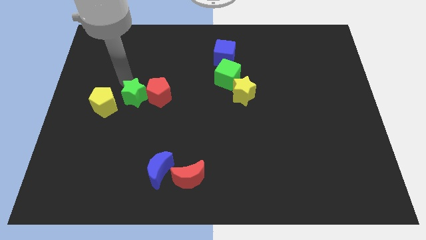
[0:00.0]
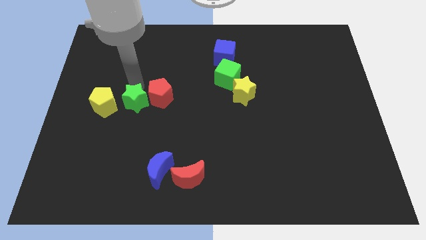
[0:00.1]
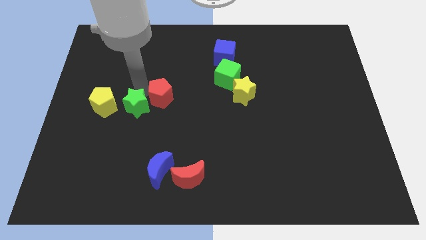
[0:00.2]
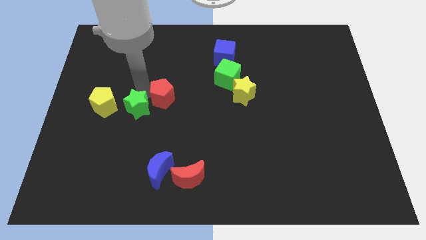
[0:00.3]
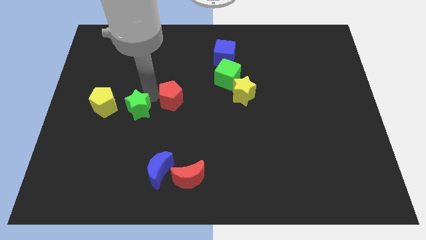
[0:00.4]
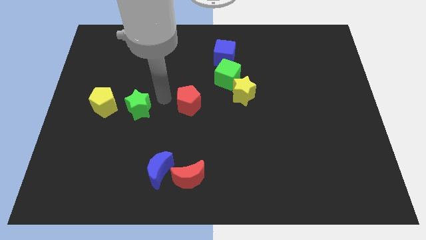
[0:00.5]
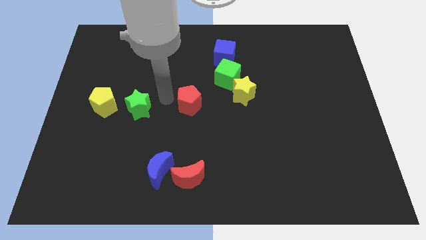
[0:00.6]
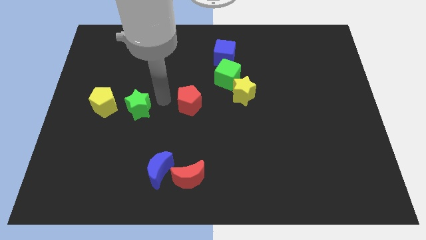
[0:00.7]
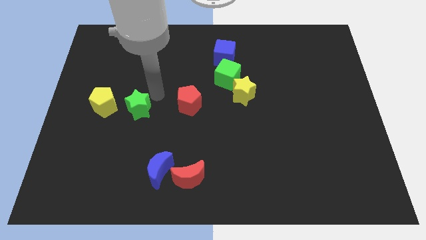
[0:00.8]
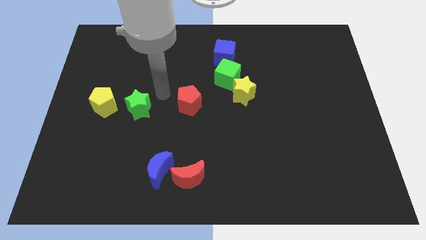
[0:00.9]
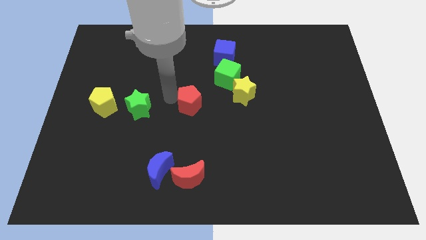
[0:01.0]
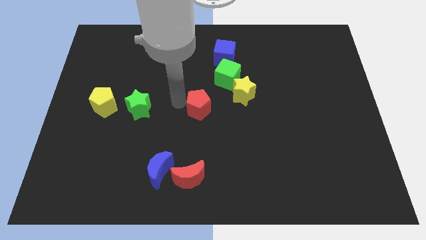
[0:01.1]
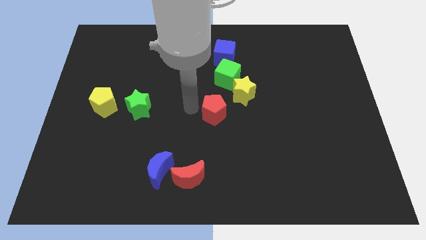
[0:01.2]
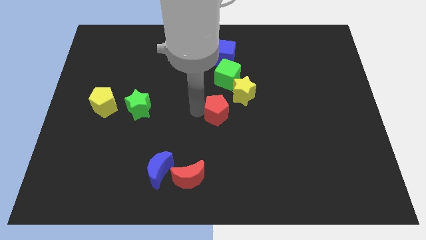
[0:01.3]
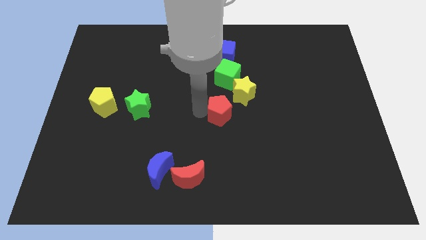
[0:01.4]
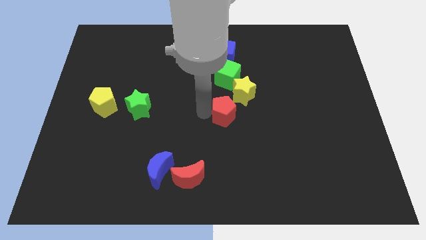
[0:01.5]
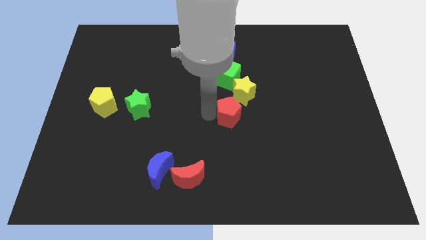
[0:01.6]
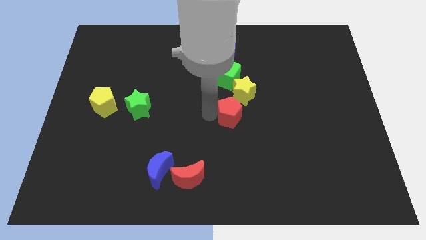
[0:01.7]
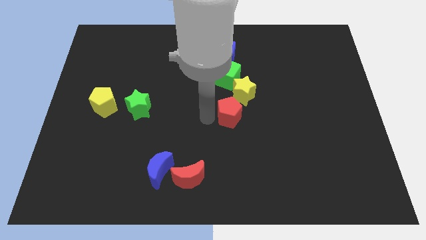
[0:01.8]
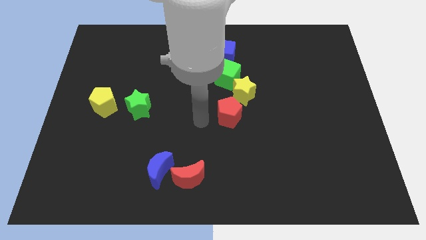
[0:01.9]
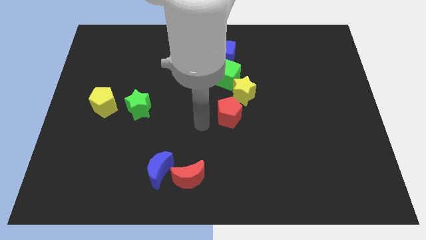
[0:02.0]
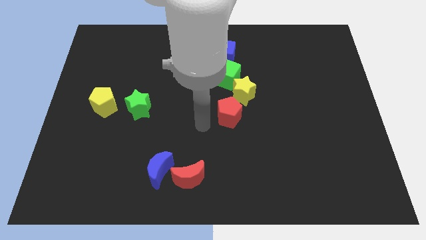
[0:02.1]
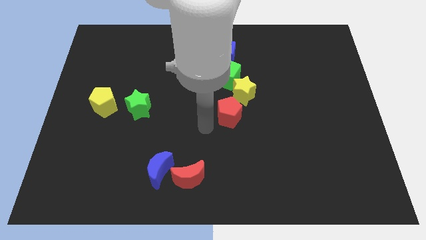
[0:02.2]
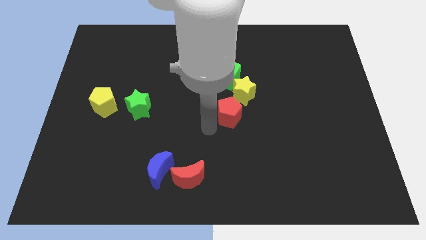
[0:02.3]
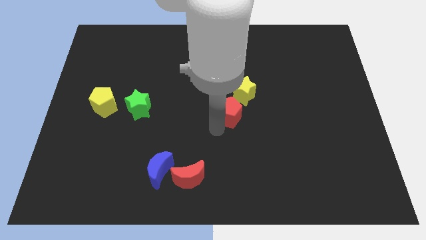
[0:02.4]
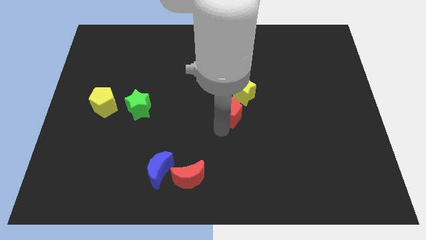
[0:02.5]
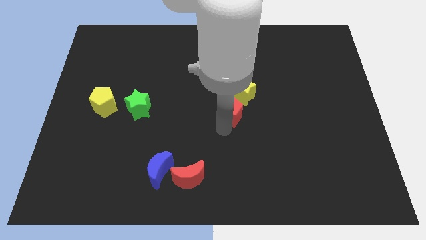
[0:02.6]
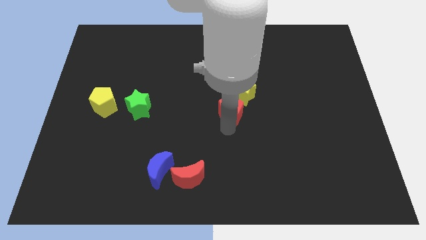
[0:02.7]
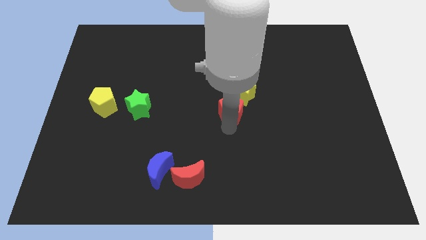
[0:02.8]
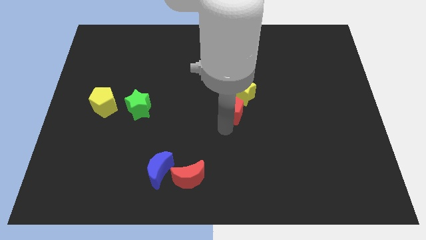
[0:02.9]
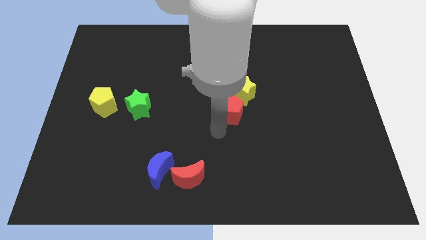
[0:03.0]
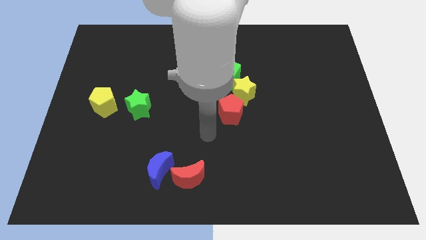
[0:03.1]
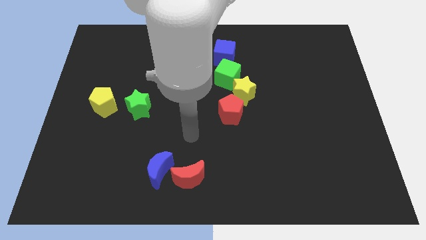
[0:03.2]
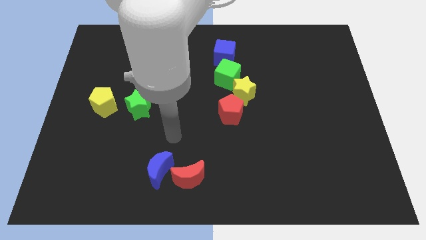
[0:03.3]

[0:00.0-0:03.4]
push the red pentagon diagonally bottom left to the yellow star

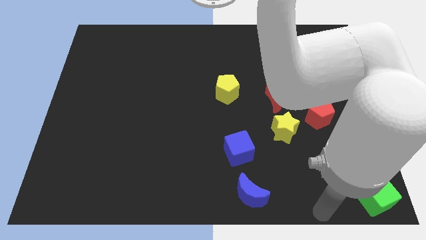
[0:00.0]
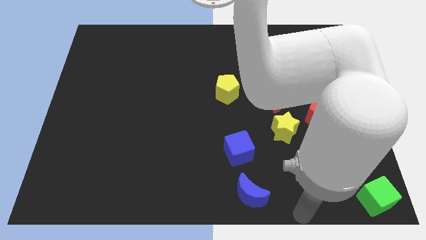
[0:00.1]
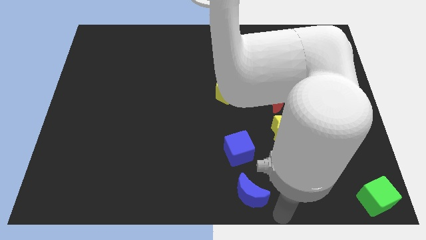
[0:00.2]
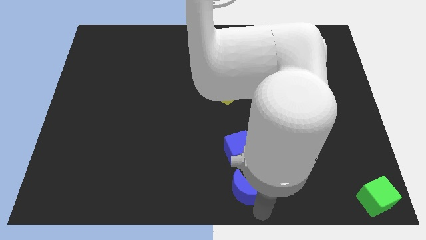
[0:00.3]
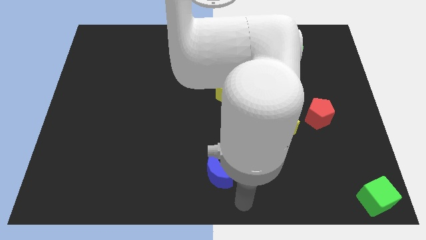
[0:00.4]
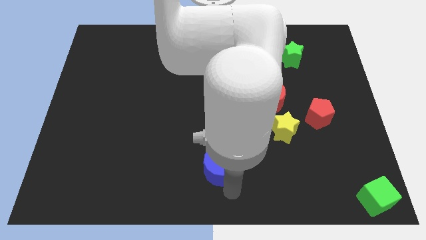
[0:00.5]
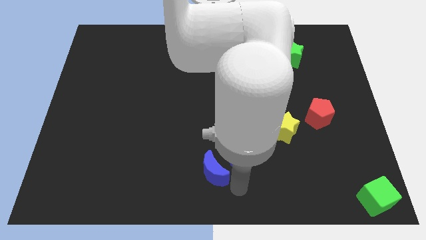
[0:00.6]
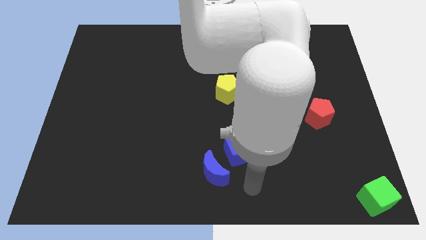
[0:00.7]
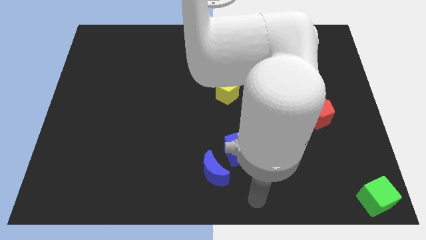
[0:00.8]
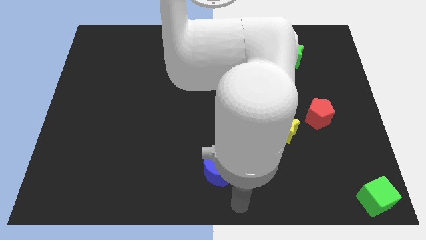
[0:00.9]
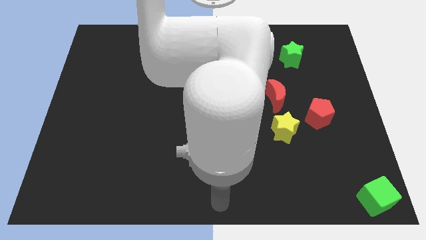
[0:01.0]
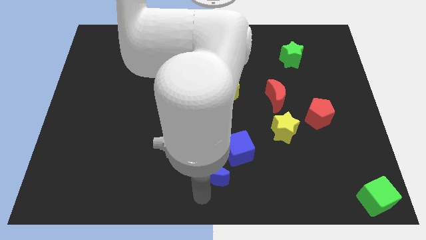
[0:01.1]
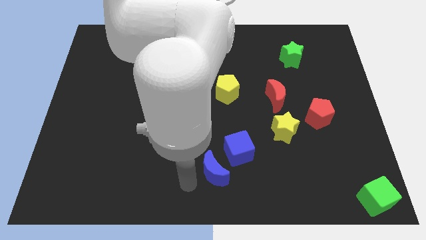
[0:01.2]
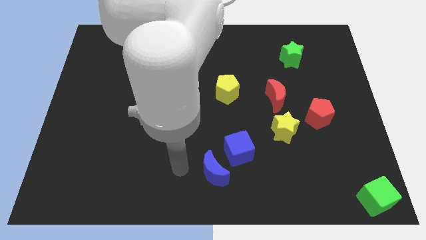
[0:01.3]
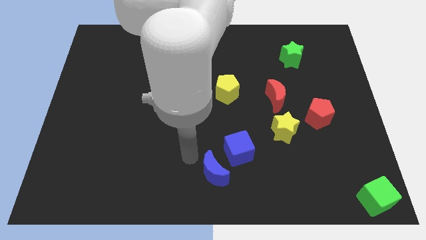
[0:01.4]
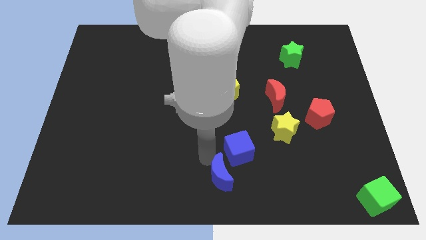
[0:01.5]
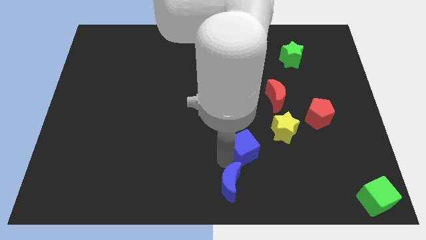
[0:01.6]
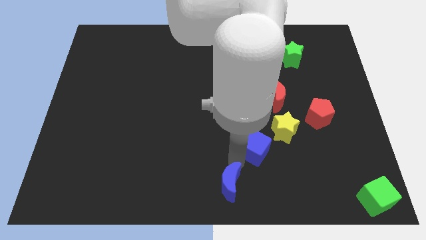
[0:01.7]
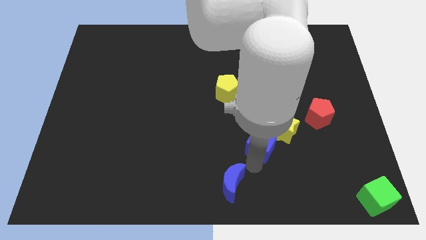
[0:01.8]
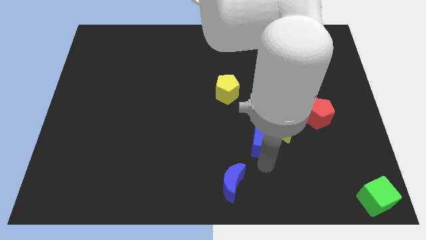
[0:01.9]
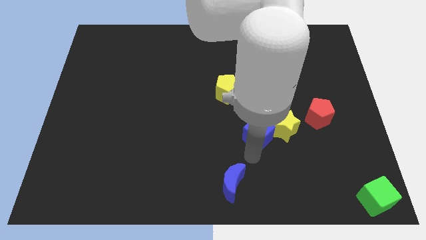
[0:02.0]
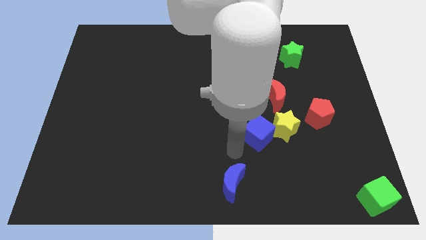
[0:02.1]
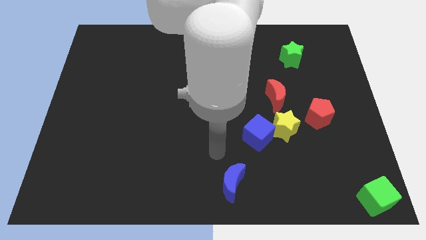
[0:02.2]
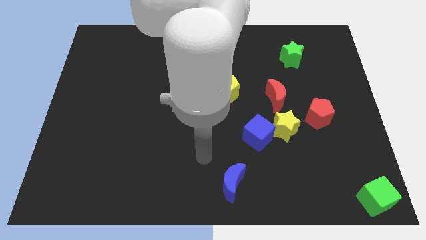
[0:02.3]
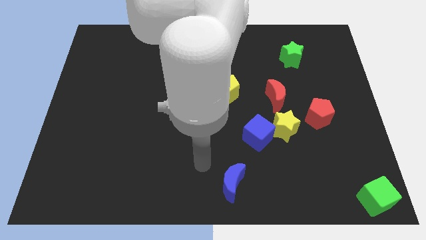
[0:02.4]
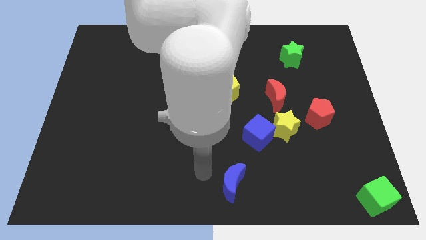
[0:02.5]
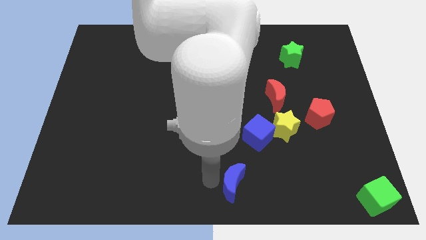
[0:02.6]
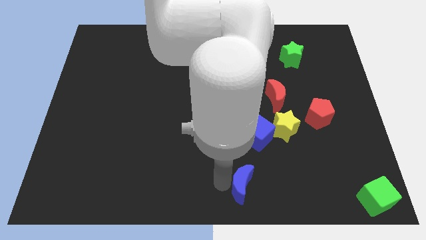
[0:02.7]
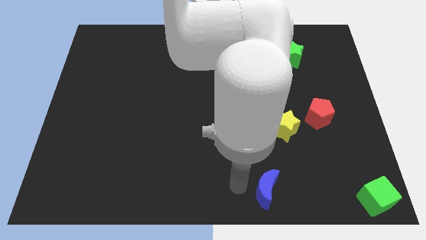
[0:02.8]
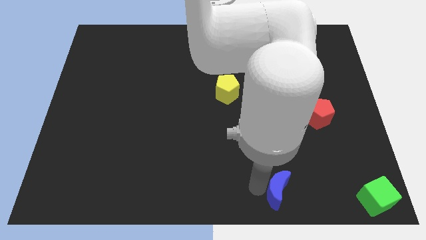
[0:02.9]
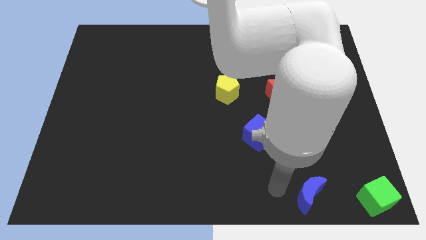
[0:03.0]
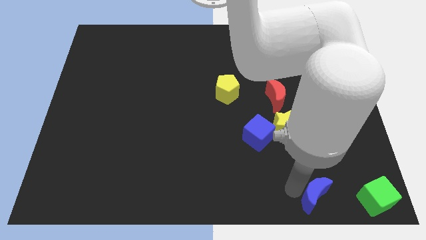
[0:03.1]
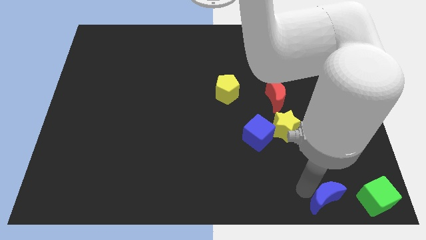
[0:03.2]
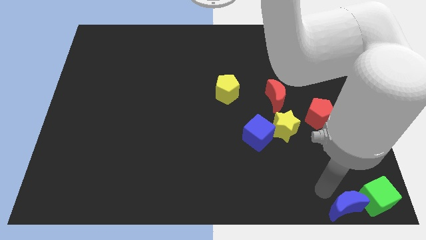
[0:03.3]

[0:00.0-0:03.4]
move the blue crescent into the green cube

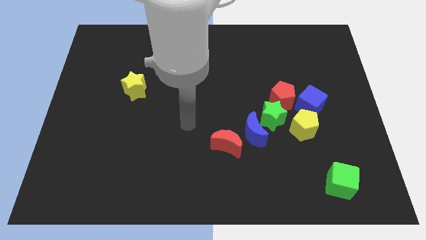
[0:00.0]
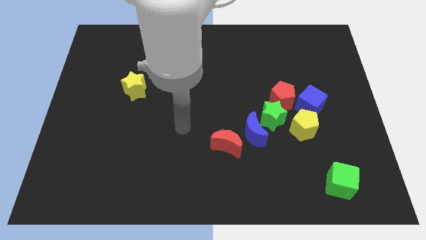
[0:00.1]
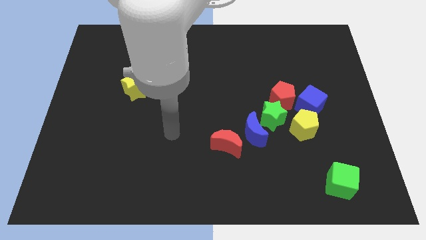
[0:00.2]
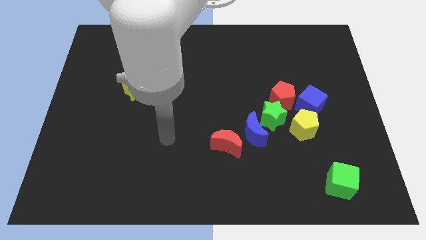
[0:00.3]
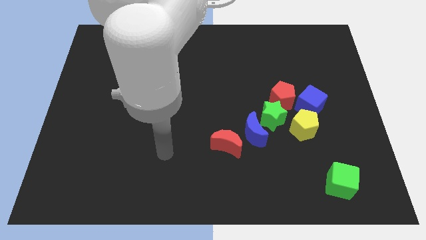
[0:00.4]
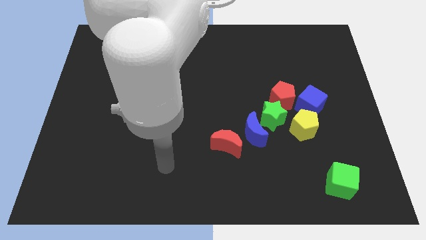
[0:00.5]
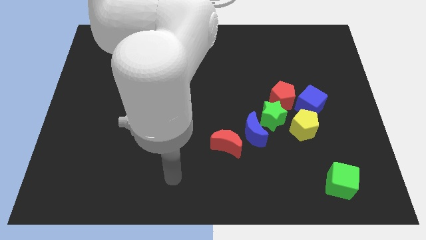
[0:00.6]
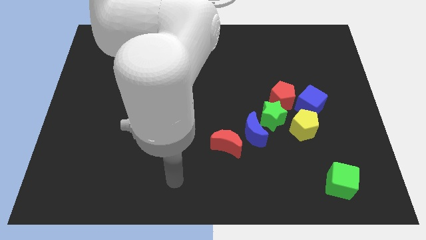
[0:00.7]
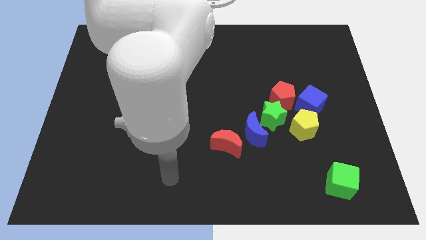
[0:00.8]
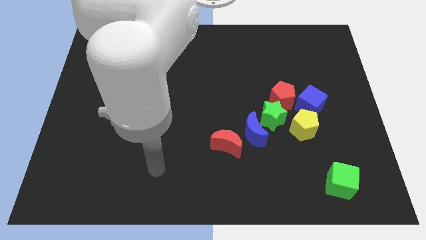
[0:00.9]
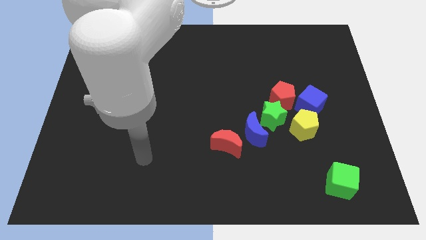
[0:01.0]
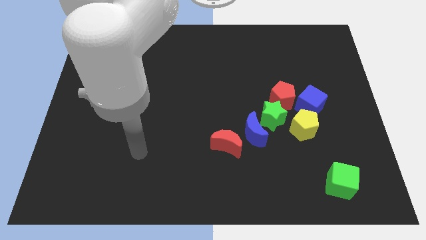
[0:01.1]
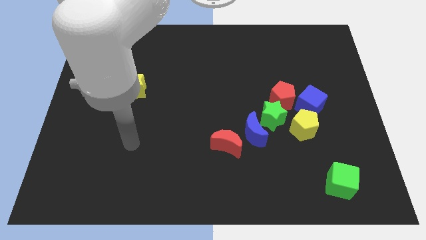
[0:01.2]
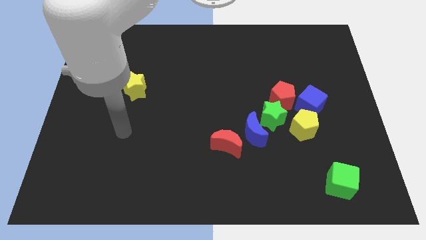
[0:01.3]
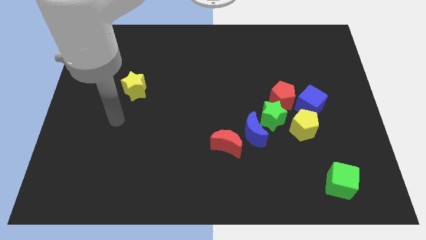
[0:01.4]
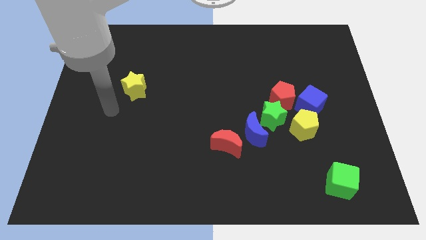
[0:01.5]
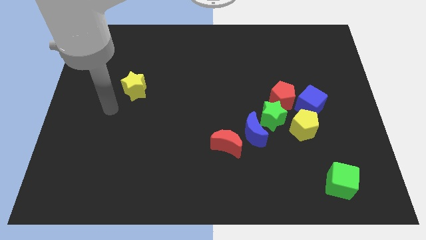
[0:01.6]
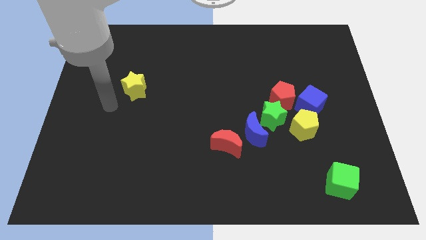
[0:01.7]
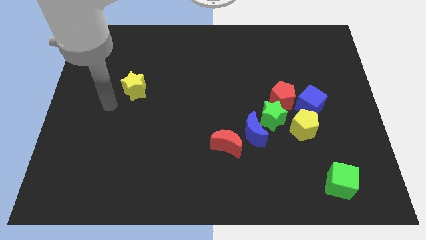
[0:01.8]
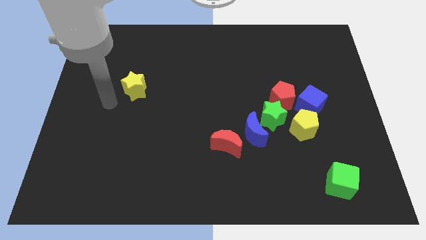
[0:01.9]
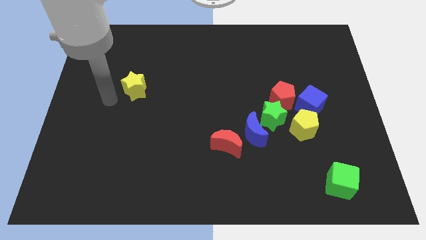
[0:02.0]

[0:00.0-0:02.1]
move your arm towards the yellow star
